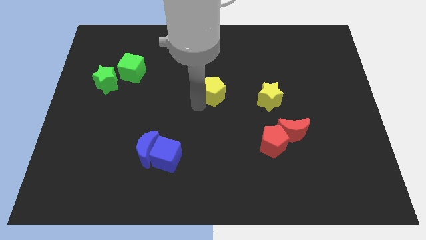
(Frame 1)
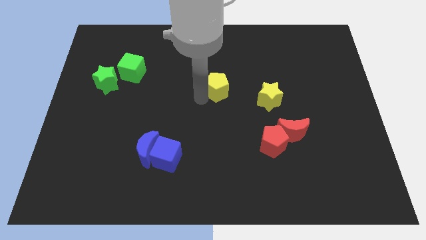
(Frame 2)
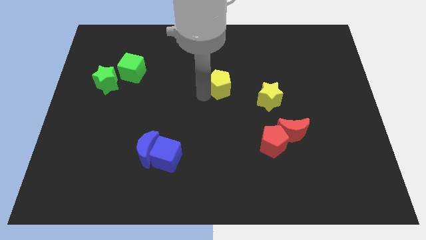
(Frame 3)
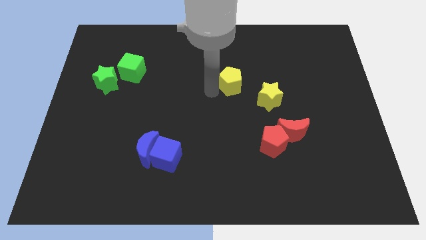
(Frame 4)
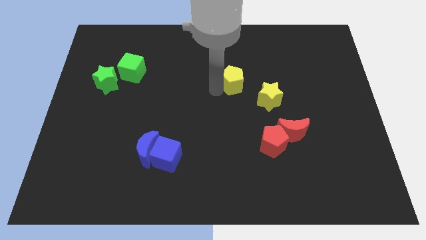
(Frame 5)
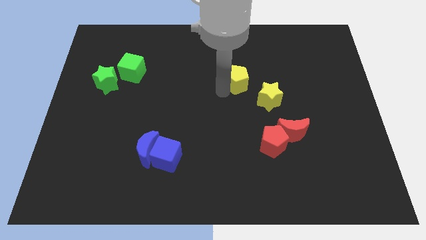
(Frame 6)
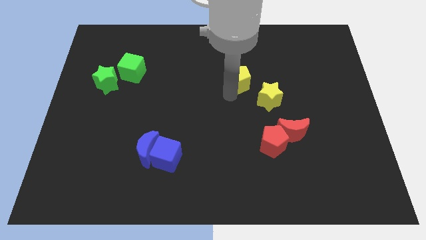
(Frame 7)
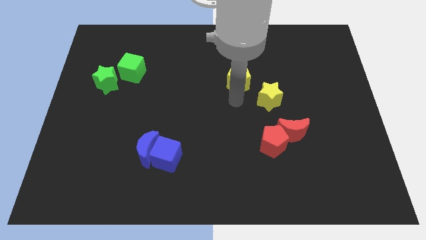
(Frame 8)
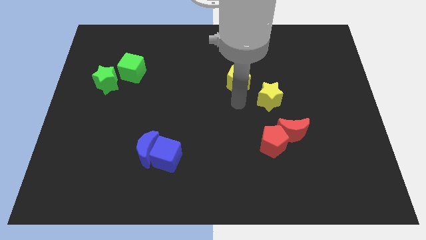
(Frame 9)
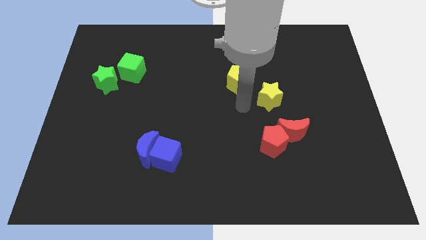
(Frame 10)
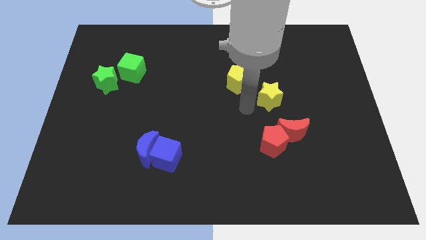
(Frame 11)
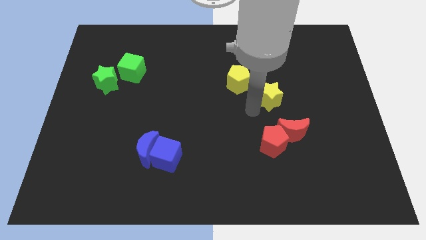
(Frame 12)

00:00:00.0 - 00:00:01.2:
push the yellow pentagon towards the top center of the board

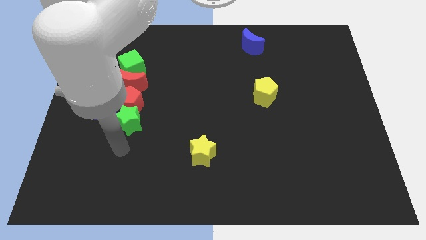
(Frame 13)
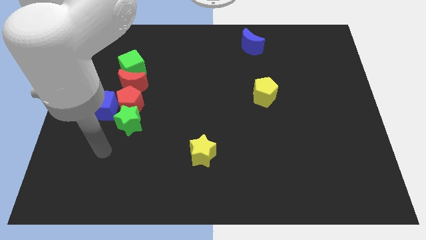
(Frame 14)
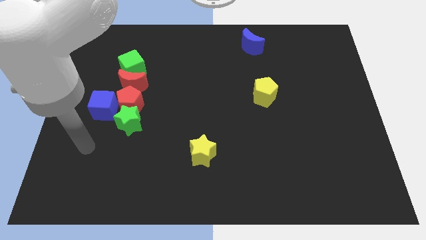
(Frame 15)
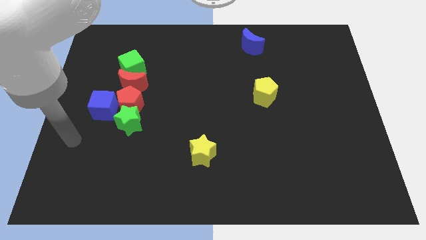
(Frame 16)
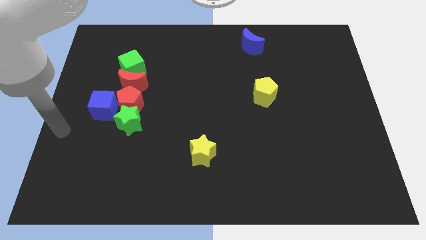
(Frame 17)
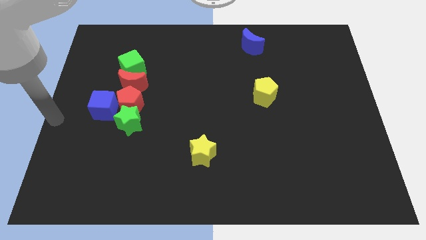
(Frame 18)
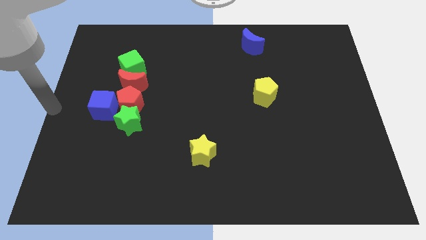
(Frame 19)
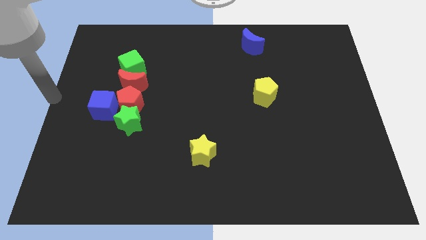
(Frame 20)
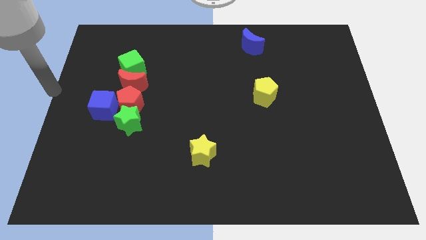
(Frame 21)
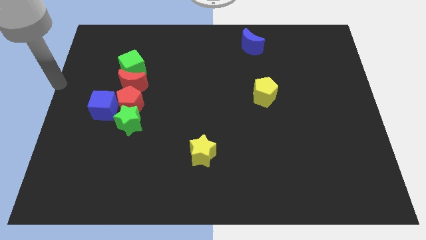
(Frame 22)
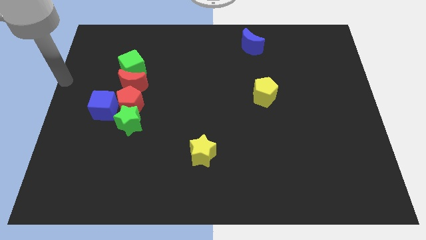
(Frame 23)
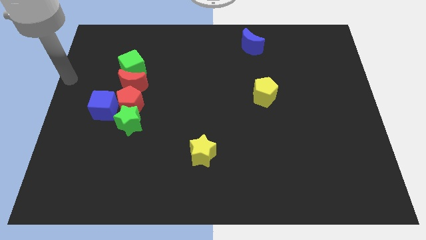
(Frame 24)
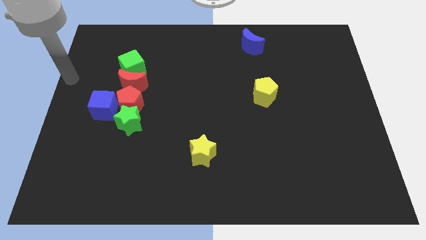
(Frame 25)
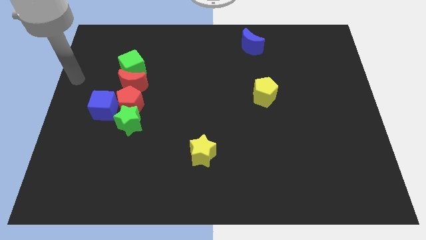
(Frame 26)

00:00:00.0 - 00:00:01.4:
move your arm away from the green star

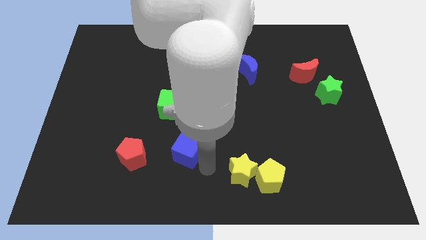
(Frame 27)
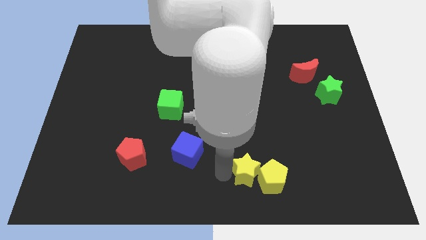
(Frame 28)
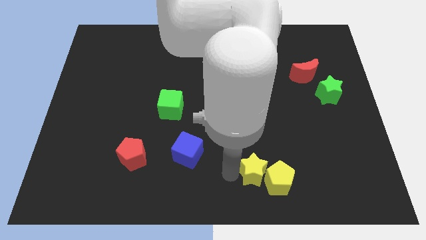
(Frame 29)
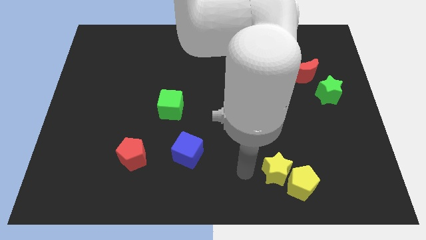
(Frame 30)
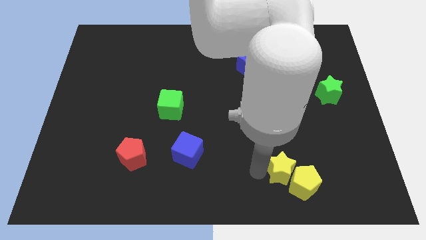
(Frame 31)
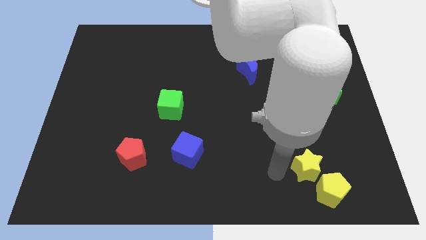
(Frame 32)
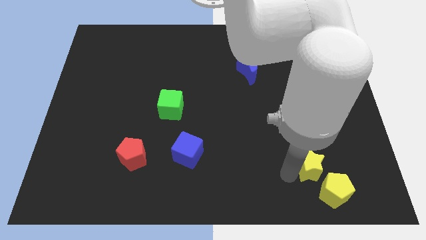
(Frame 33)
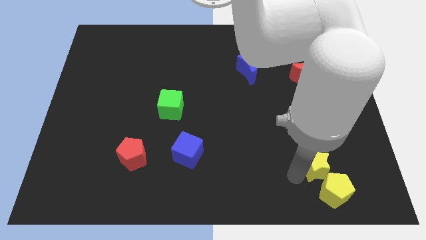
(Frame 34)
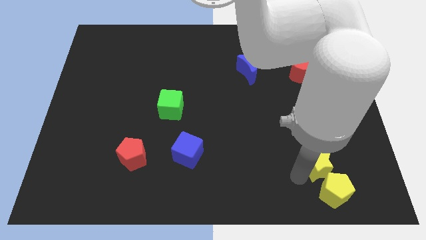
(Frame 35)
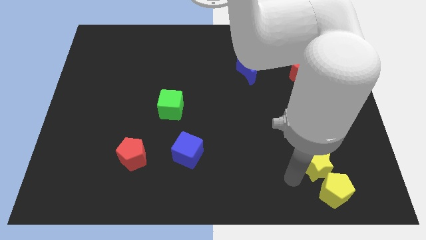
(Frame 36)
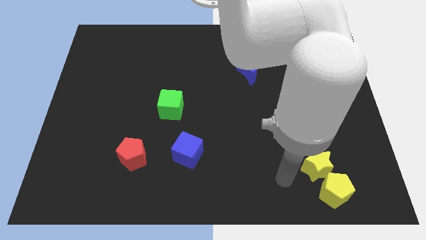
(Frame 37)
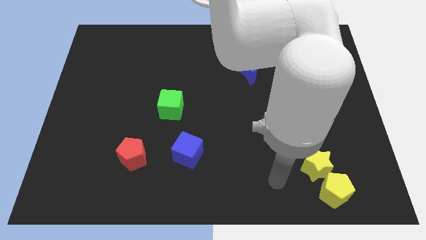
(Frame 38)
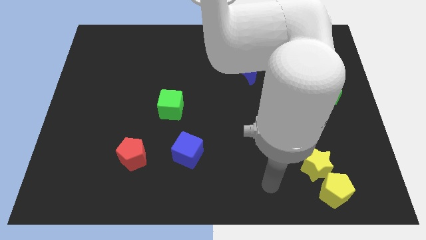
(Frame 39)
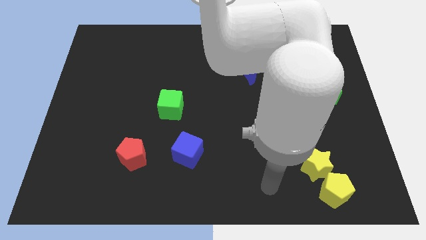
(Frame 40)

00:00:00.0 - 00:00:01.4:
slide yellow star along with yellow pentagon towards the bottom right

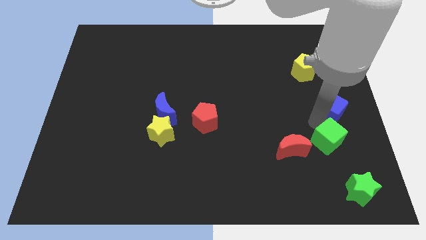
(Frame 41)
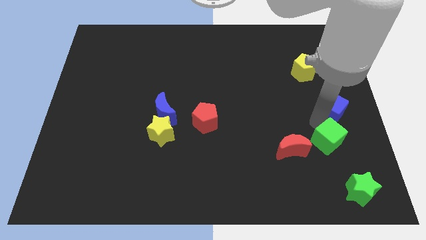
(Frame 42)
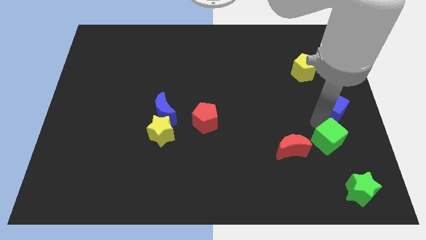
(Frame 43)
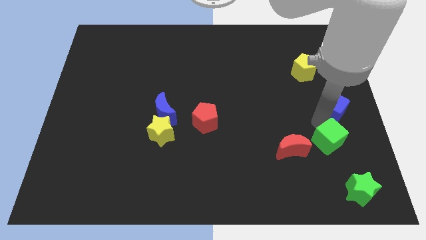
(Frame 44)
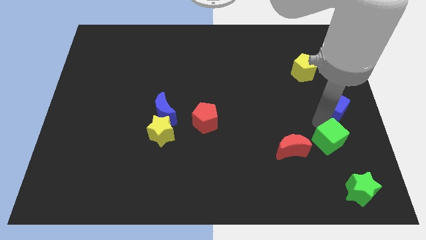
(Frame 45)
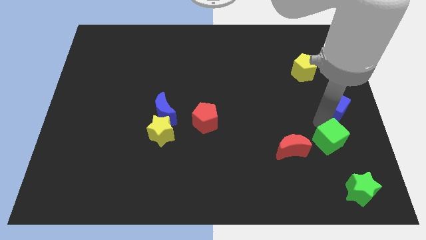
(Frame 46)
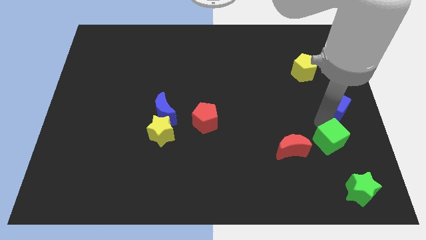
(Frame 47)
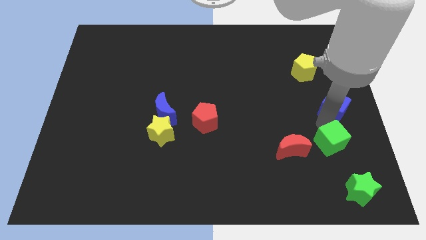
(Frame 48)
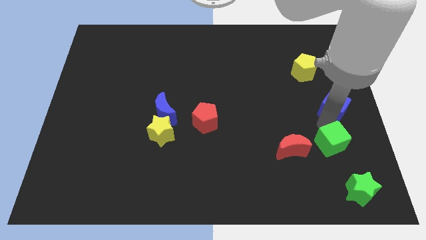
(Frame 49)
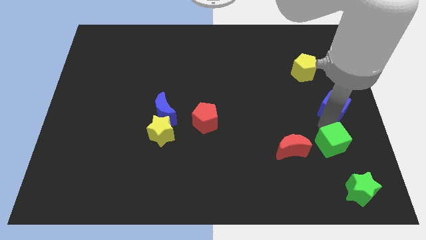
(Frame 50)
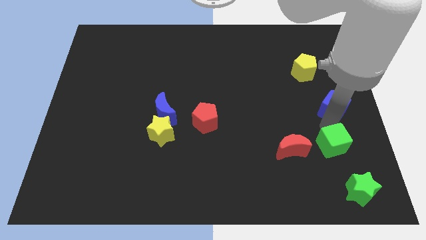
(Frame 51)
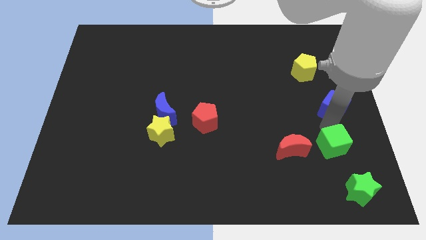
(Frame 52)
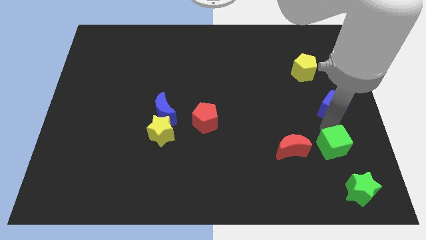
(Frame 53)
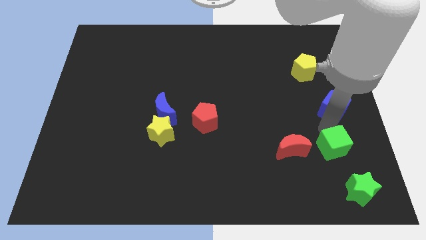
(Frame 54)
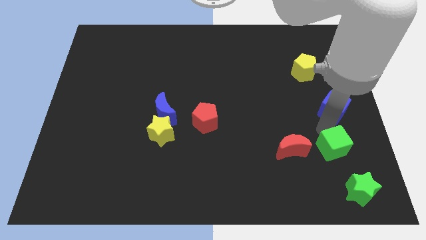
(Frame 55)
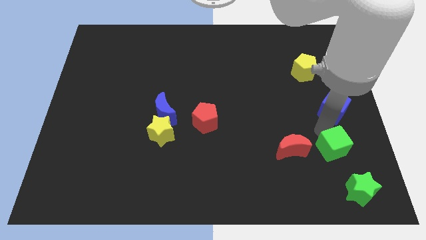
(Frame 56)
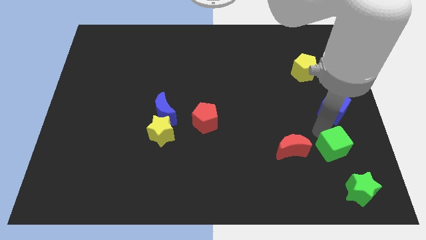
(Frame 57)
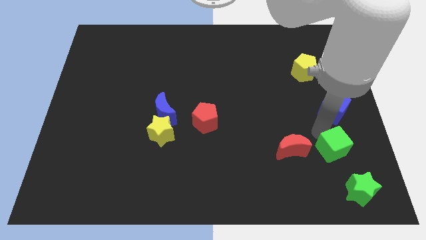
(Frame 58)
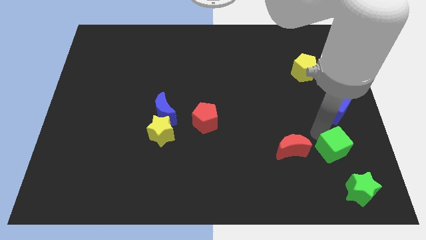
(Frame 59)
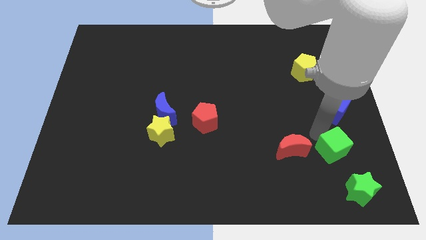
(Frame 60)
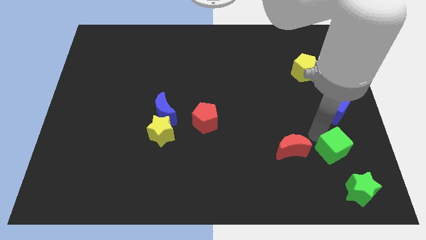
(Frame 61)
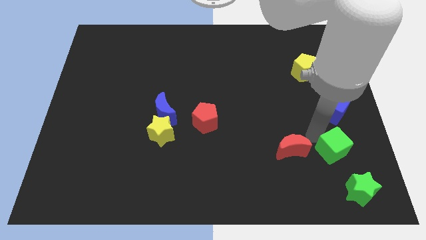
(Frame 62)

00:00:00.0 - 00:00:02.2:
place green cube to the right of red moon

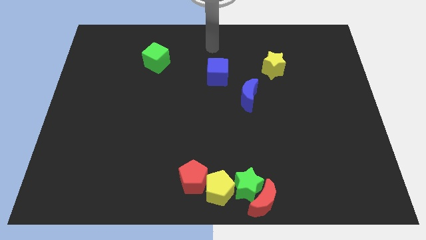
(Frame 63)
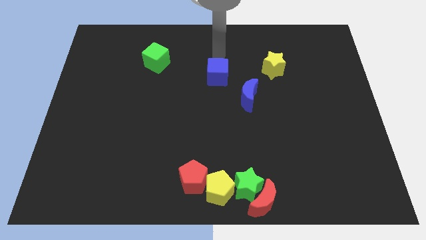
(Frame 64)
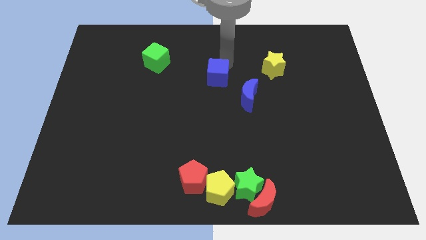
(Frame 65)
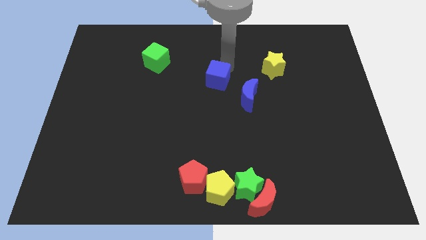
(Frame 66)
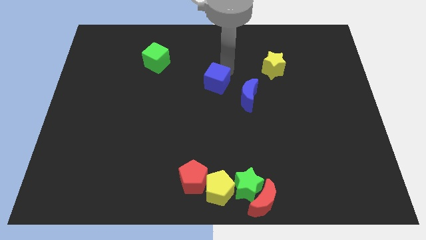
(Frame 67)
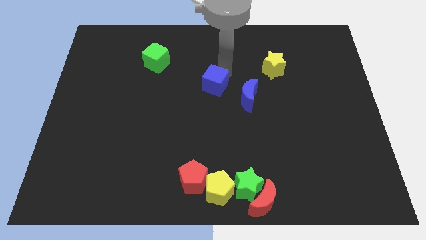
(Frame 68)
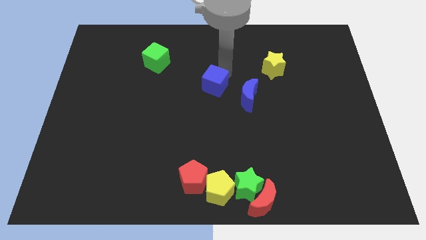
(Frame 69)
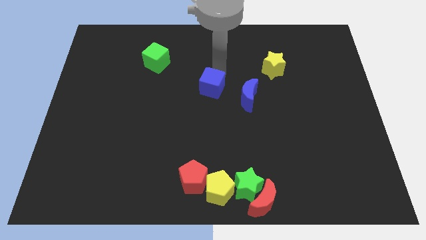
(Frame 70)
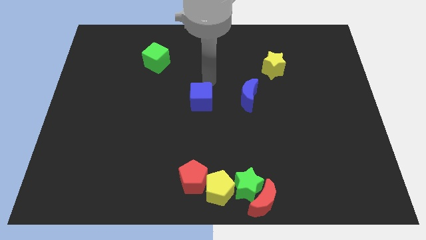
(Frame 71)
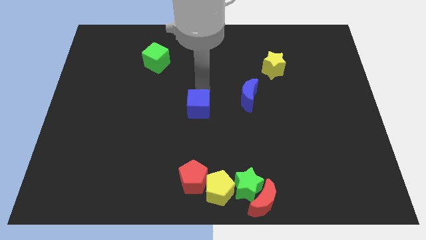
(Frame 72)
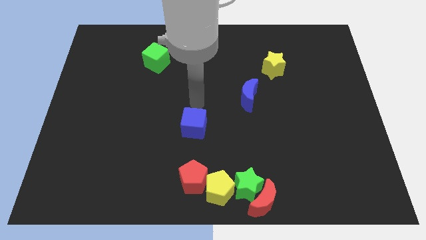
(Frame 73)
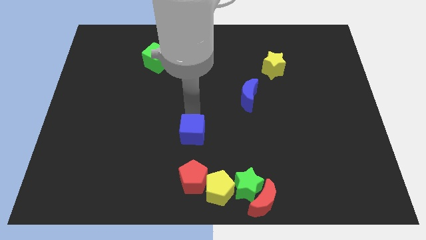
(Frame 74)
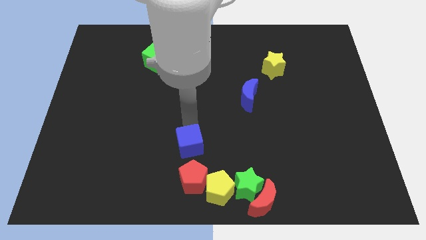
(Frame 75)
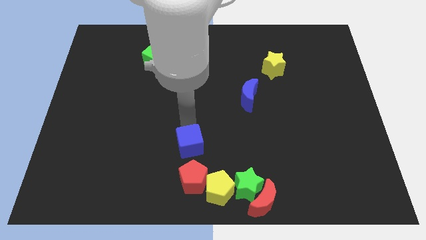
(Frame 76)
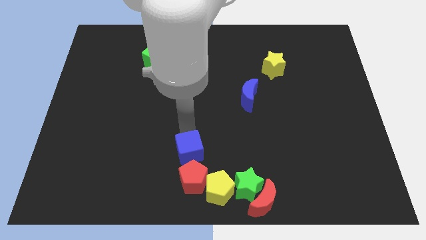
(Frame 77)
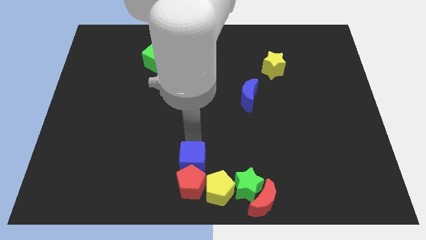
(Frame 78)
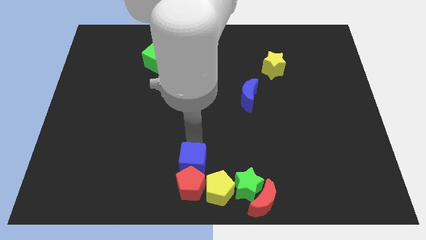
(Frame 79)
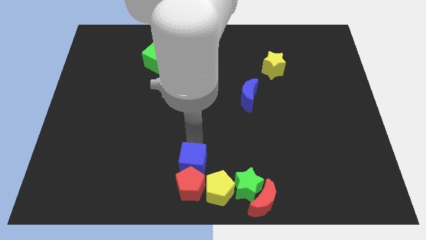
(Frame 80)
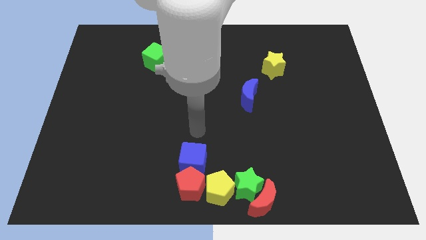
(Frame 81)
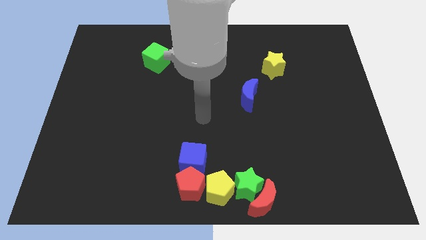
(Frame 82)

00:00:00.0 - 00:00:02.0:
push the blue cube into red pentagon

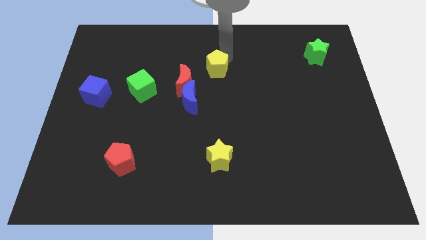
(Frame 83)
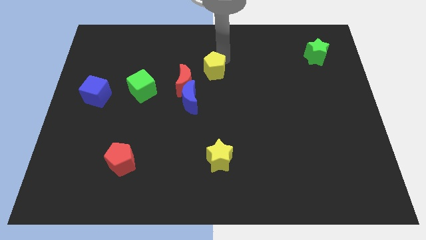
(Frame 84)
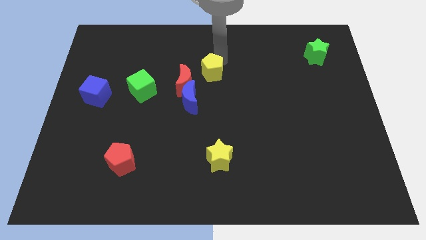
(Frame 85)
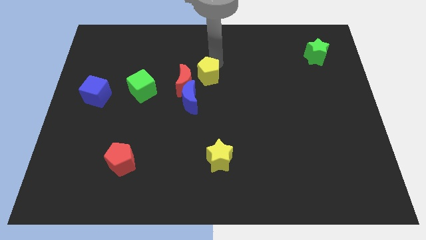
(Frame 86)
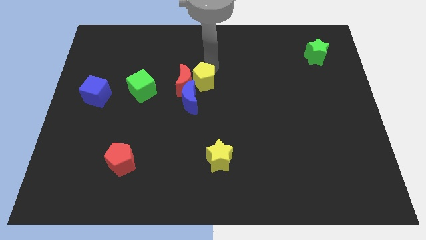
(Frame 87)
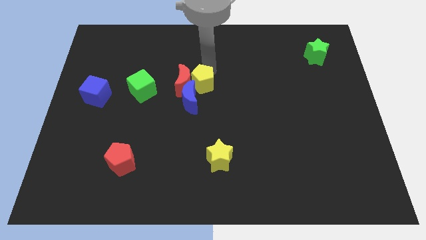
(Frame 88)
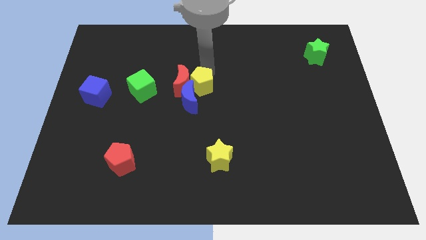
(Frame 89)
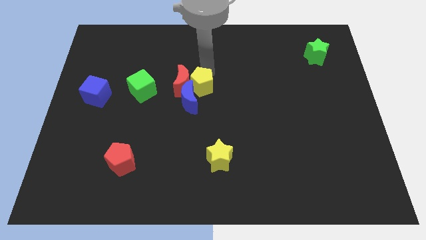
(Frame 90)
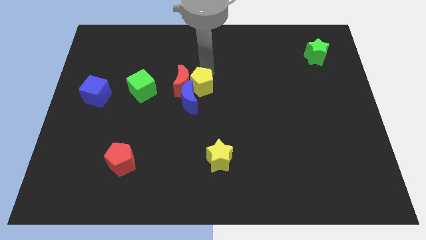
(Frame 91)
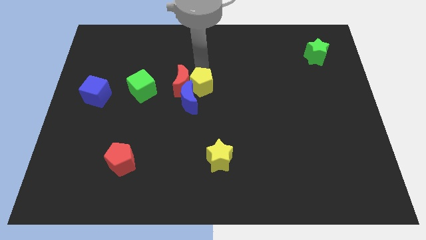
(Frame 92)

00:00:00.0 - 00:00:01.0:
push the yellow pentagon to the center on the board
